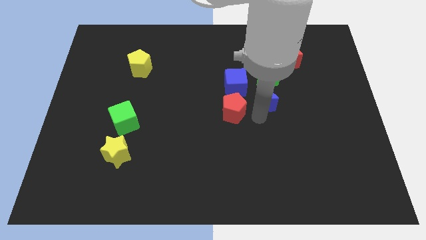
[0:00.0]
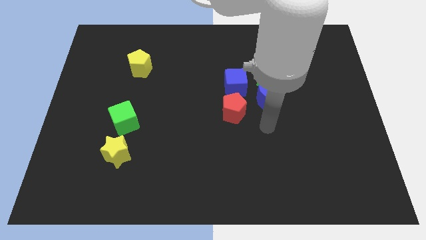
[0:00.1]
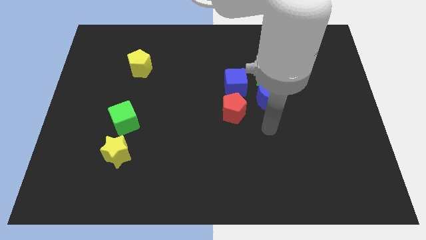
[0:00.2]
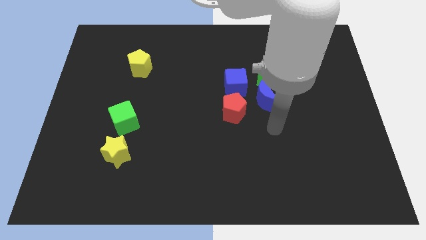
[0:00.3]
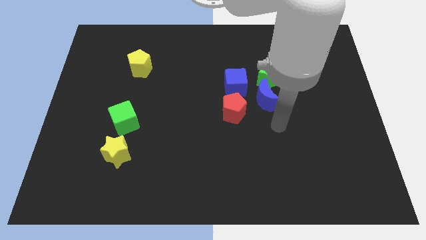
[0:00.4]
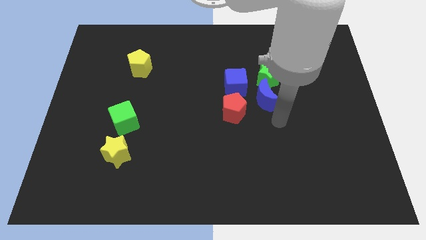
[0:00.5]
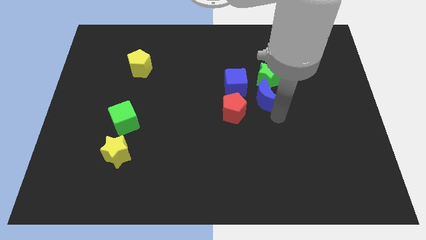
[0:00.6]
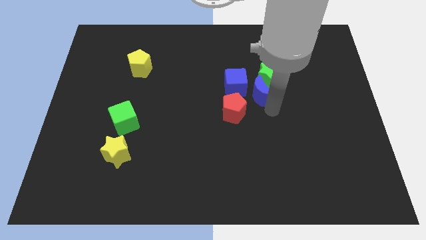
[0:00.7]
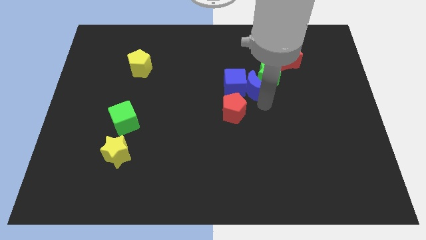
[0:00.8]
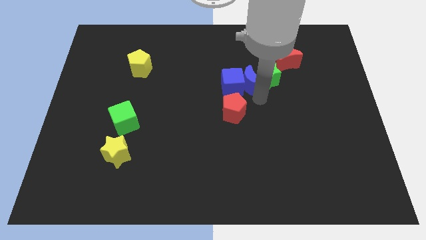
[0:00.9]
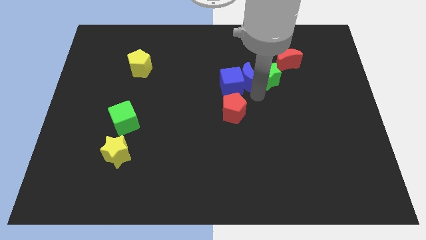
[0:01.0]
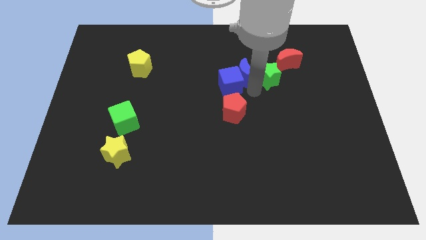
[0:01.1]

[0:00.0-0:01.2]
place the blue moon in between blue cube and green star

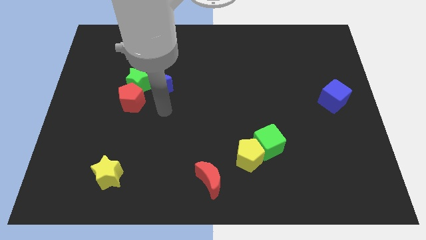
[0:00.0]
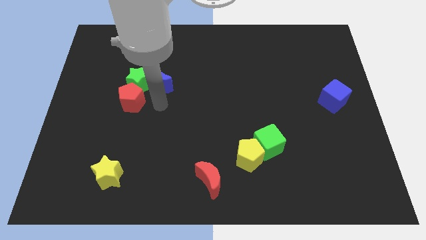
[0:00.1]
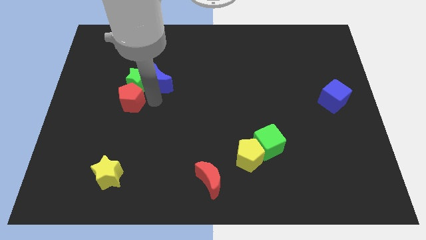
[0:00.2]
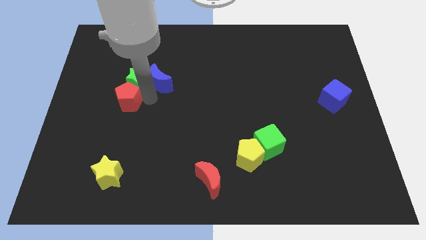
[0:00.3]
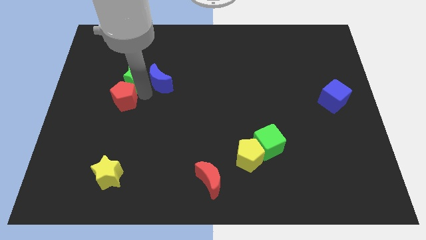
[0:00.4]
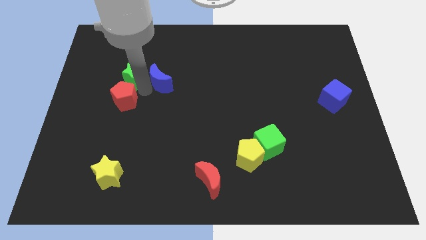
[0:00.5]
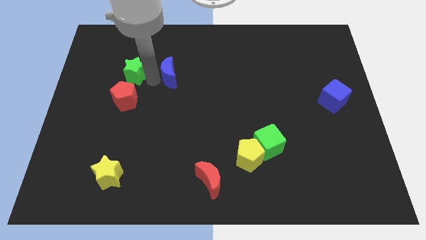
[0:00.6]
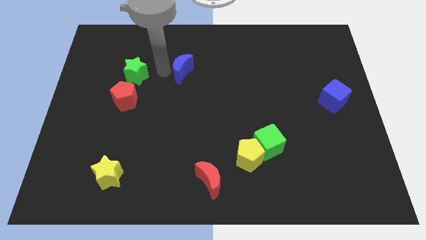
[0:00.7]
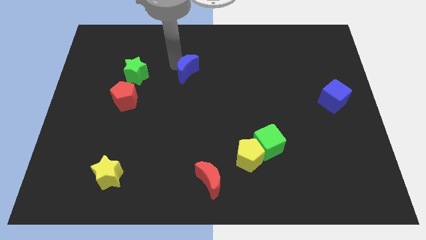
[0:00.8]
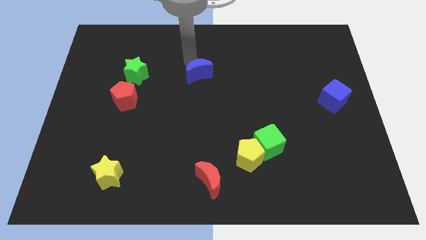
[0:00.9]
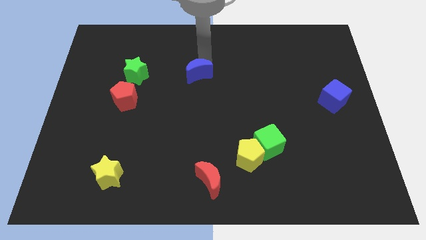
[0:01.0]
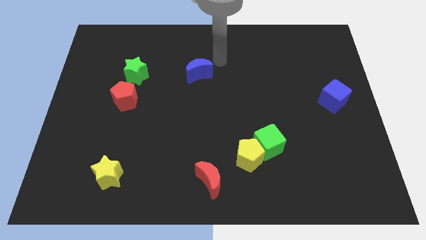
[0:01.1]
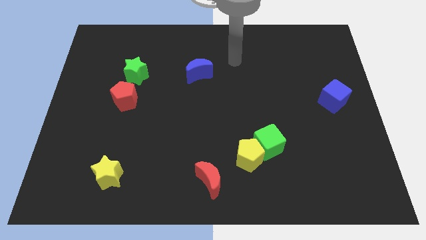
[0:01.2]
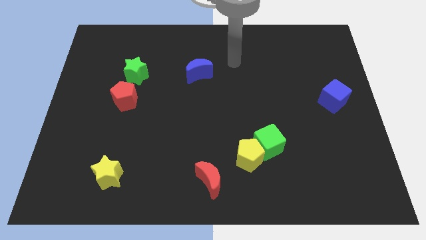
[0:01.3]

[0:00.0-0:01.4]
separate blue moon from green star

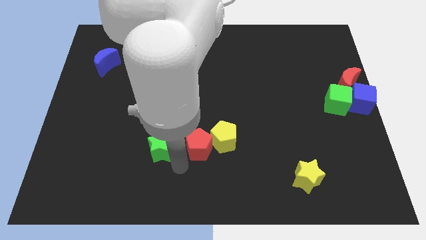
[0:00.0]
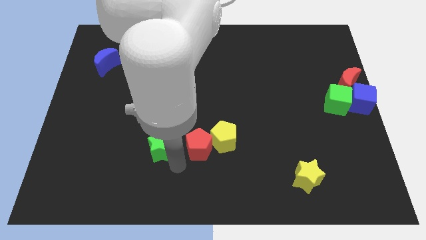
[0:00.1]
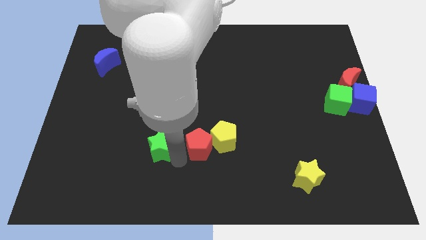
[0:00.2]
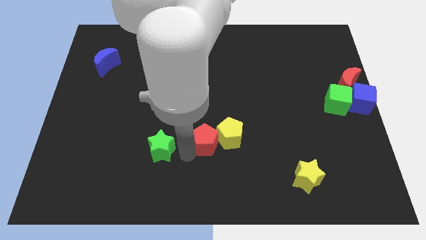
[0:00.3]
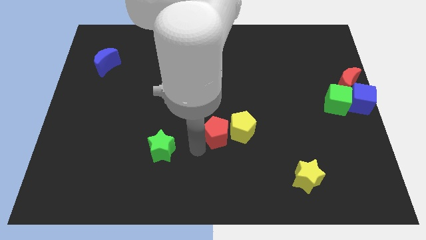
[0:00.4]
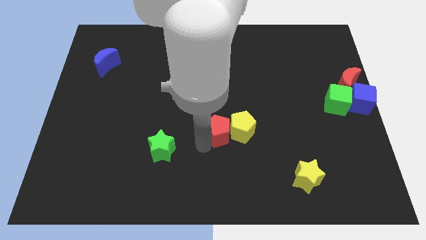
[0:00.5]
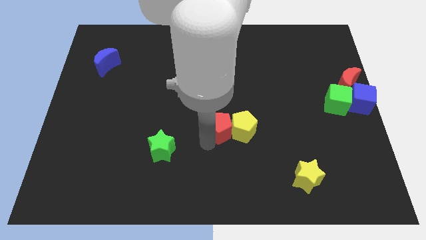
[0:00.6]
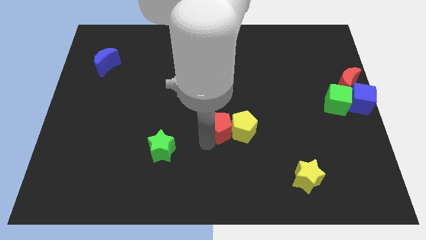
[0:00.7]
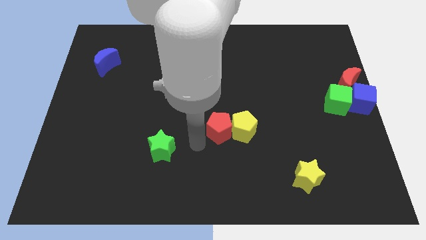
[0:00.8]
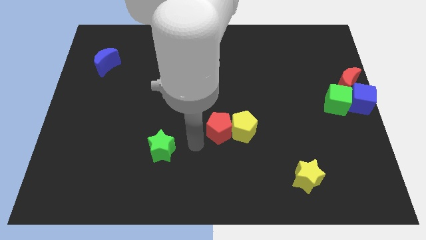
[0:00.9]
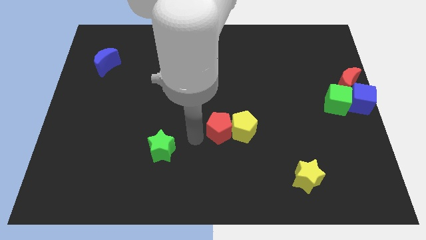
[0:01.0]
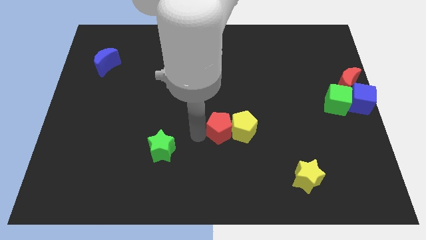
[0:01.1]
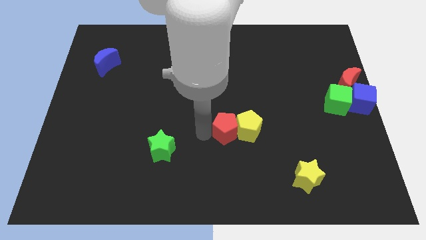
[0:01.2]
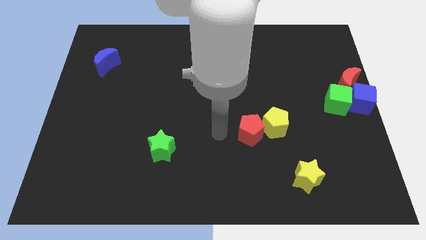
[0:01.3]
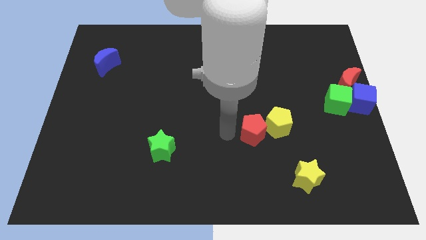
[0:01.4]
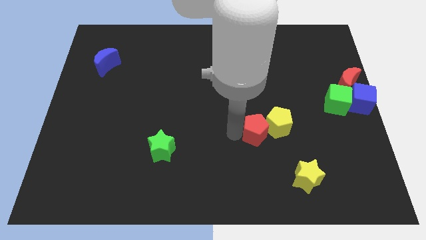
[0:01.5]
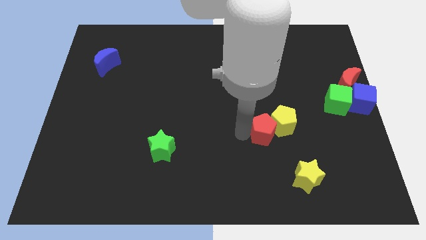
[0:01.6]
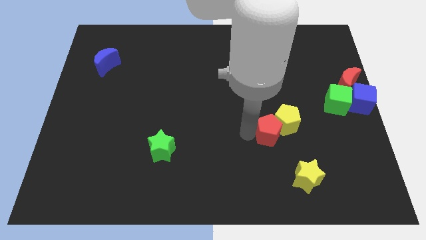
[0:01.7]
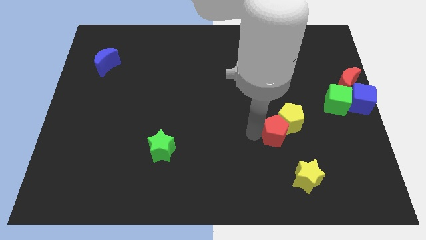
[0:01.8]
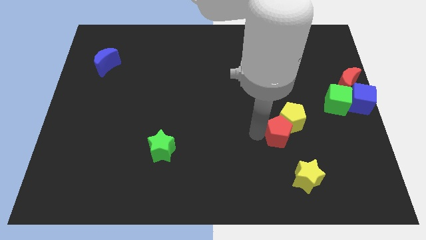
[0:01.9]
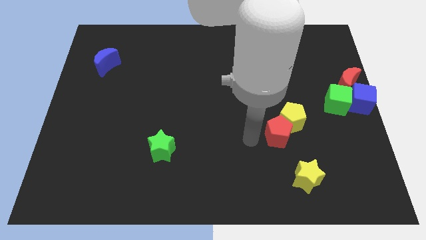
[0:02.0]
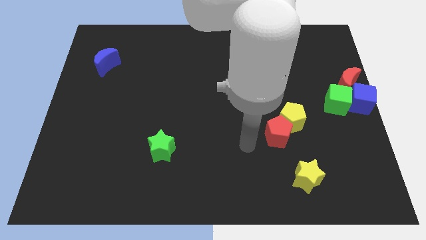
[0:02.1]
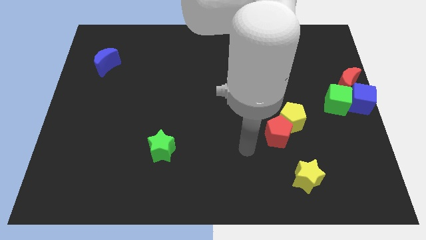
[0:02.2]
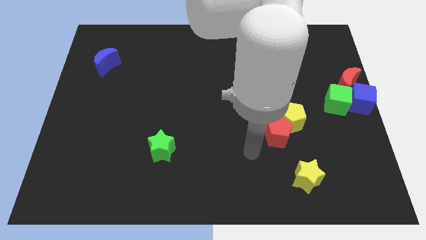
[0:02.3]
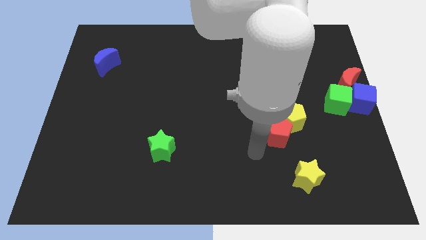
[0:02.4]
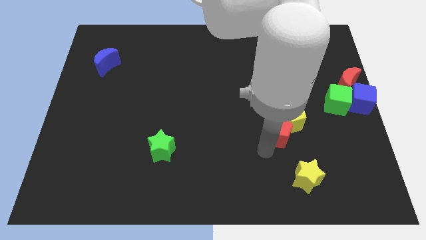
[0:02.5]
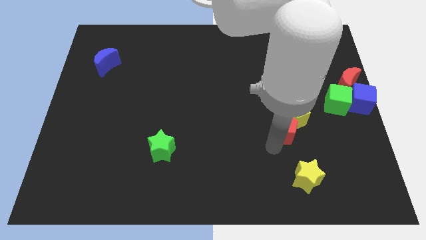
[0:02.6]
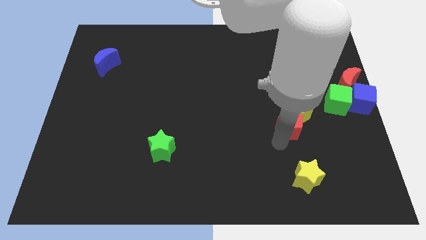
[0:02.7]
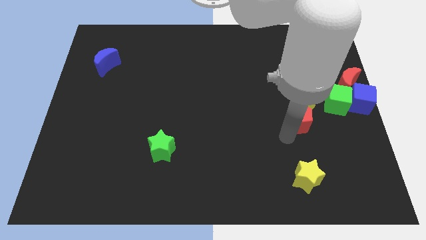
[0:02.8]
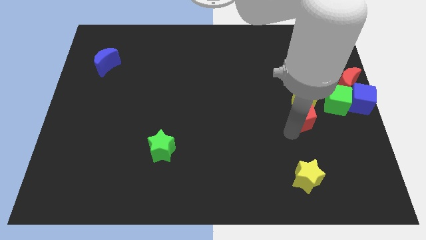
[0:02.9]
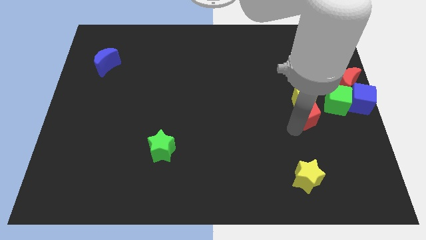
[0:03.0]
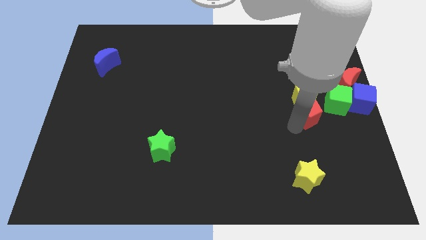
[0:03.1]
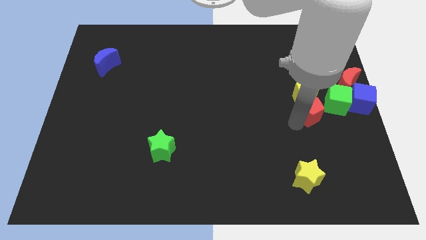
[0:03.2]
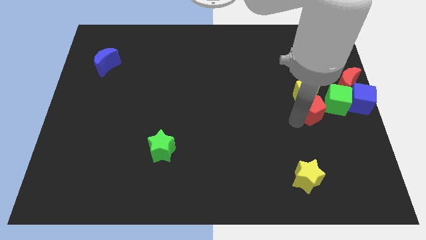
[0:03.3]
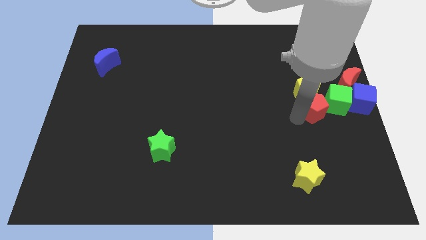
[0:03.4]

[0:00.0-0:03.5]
place red and yellow pentagon adjacent to green cube

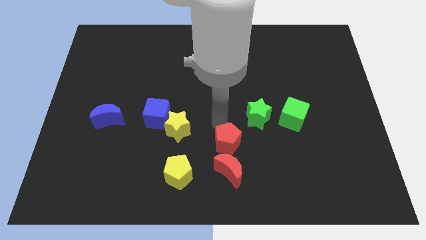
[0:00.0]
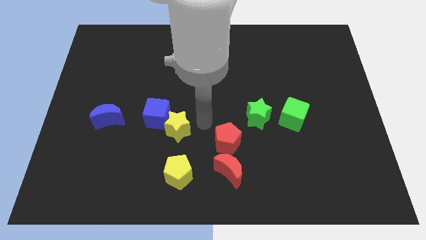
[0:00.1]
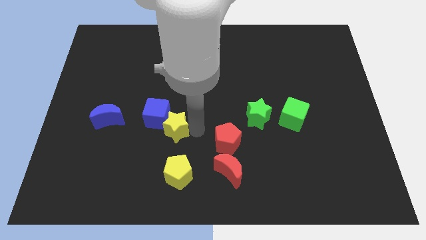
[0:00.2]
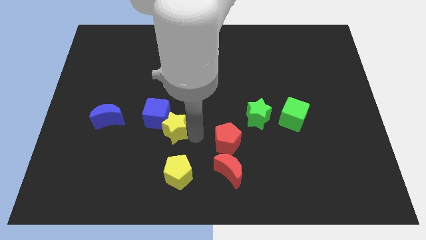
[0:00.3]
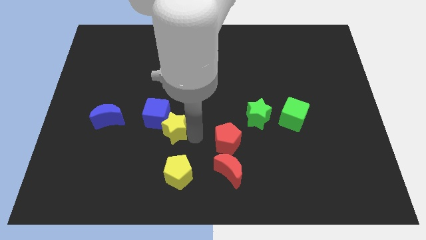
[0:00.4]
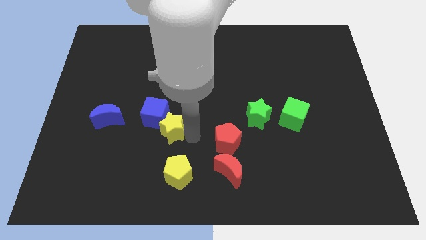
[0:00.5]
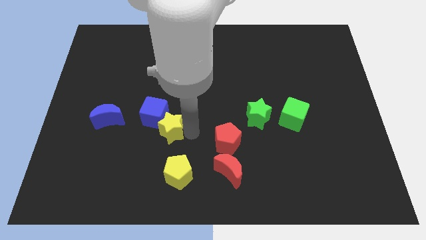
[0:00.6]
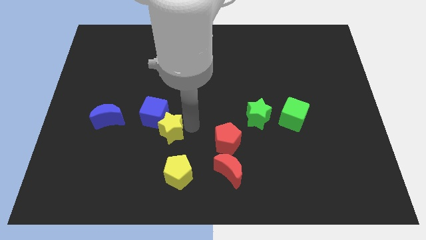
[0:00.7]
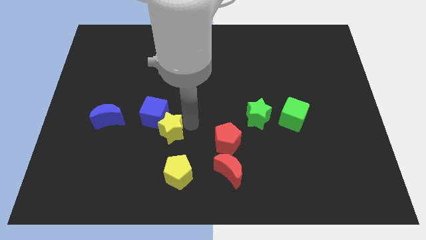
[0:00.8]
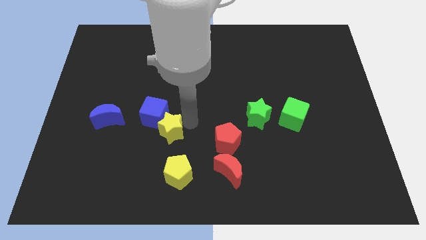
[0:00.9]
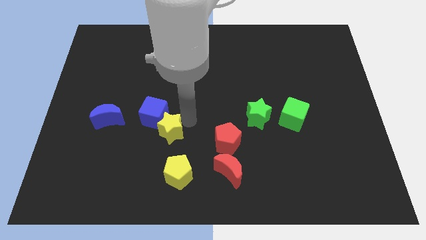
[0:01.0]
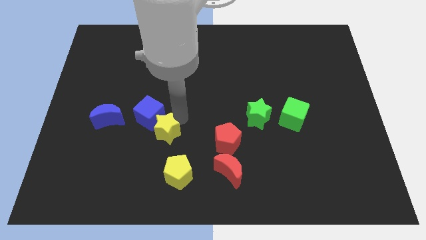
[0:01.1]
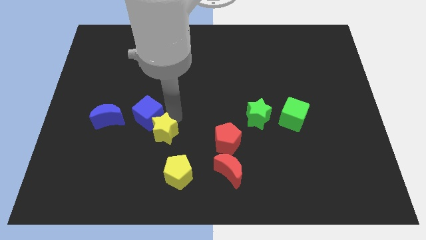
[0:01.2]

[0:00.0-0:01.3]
move yellow star near to the blue cube

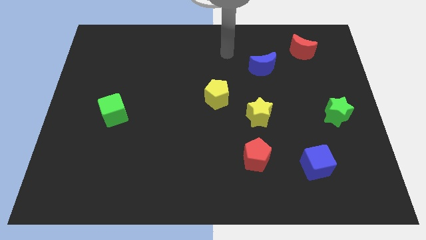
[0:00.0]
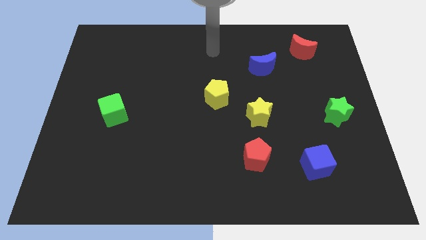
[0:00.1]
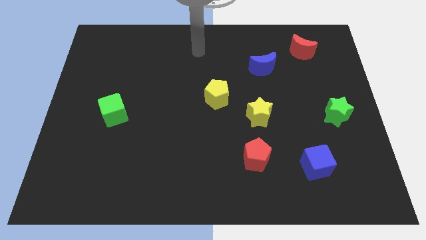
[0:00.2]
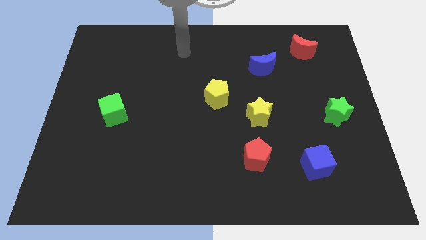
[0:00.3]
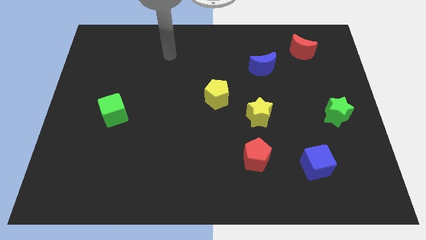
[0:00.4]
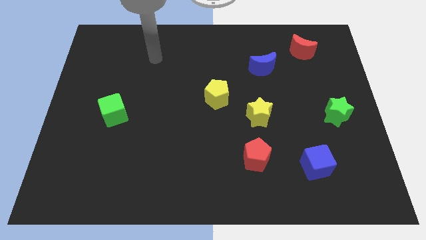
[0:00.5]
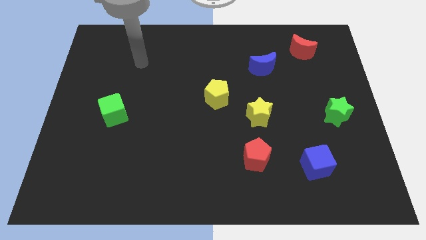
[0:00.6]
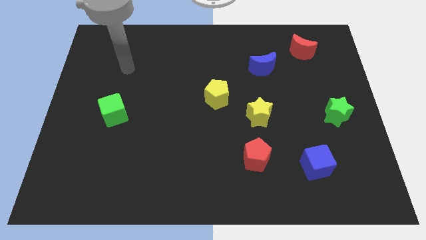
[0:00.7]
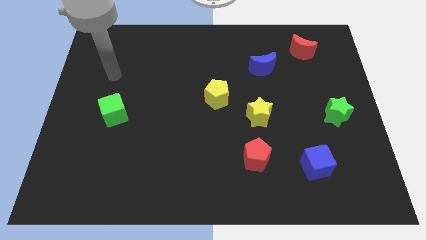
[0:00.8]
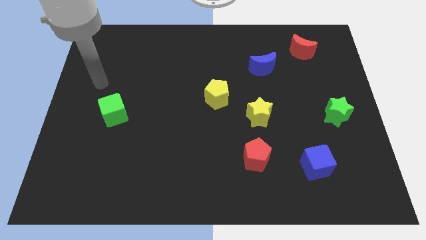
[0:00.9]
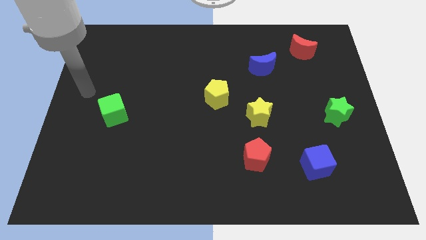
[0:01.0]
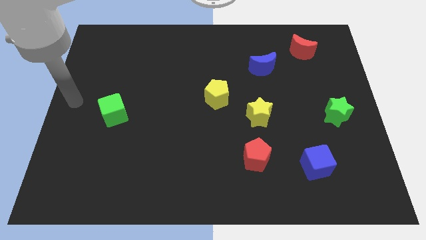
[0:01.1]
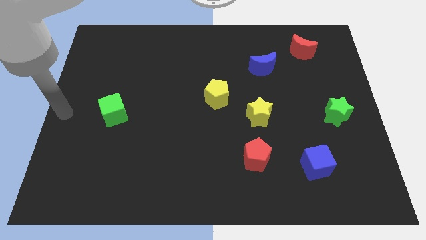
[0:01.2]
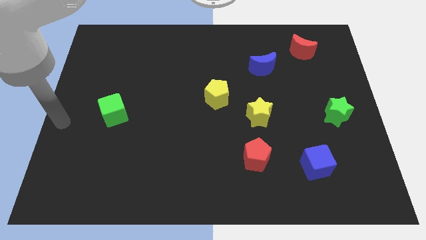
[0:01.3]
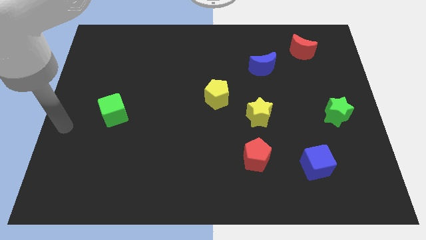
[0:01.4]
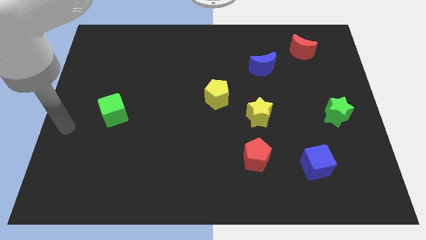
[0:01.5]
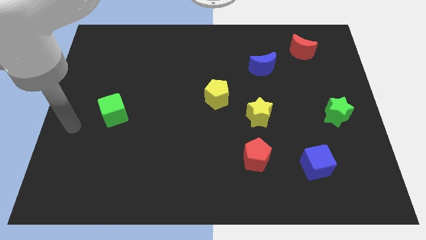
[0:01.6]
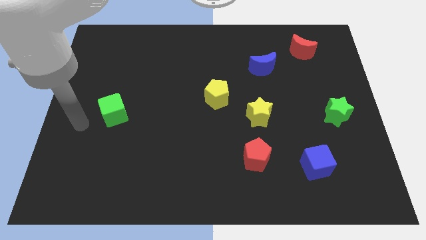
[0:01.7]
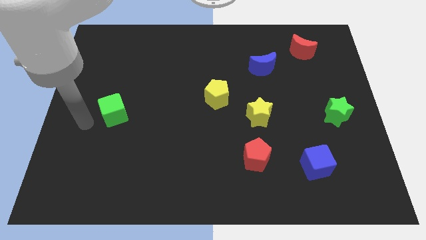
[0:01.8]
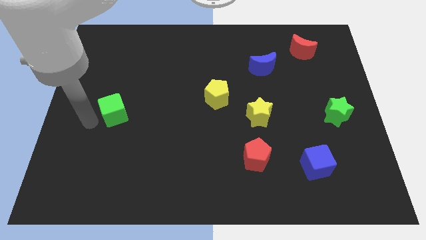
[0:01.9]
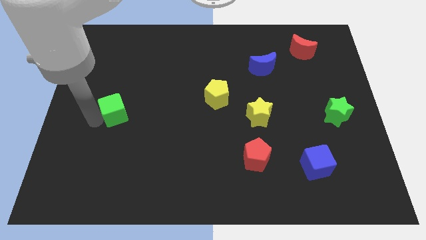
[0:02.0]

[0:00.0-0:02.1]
place your arm at the left of the green cube
